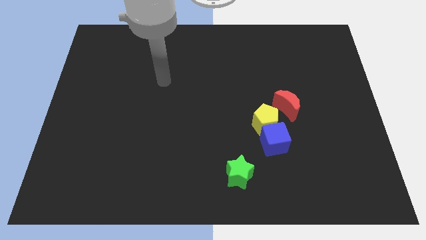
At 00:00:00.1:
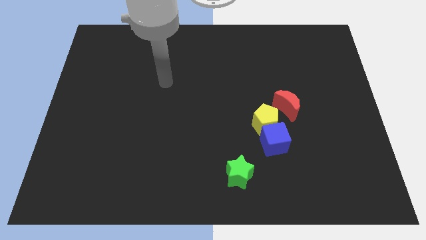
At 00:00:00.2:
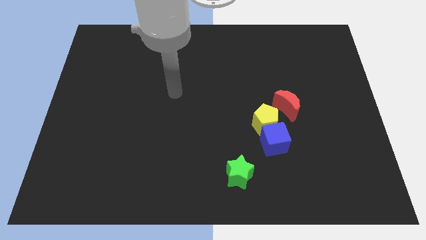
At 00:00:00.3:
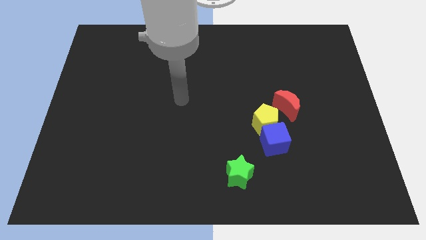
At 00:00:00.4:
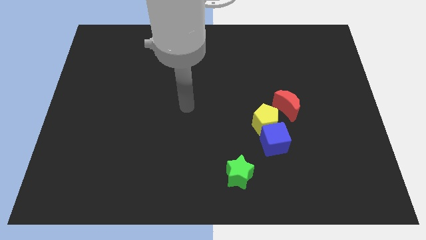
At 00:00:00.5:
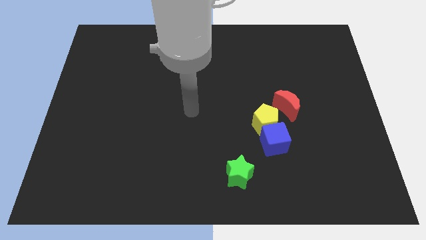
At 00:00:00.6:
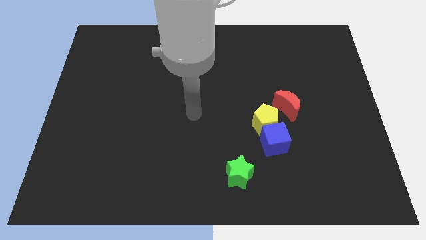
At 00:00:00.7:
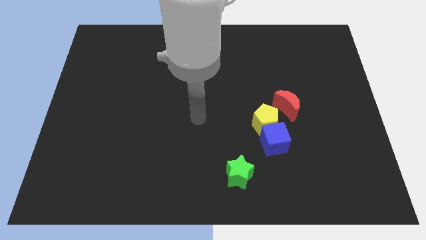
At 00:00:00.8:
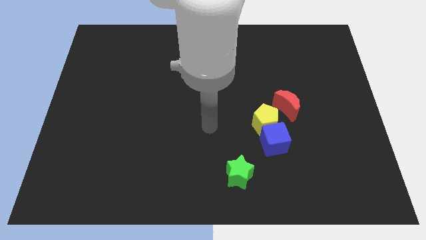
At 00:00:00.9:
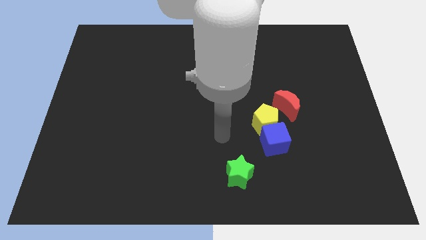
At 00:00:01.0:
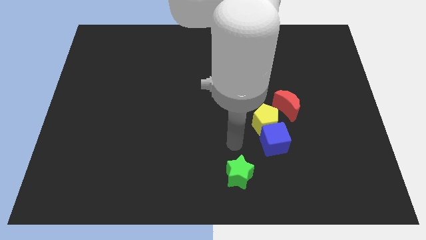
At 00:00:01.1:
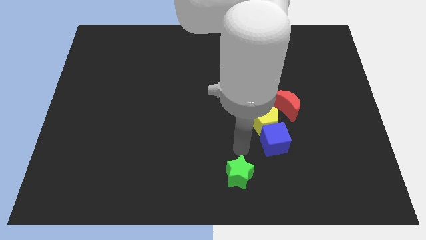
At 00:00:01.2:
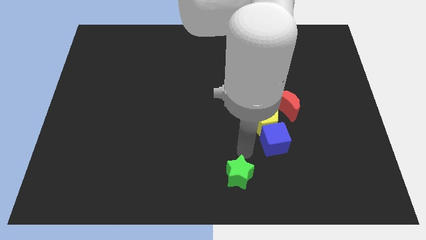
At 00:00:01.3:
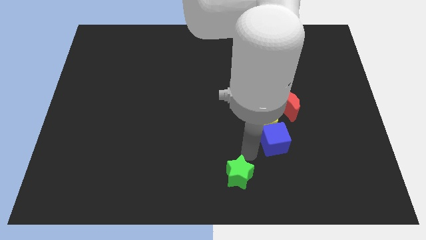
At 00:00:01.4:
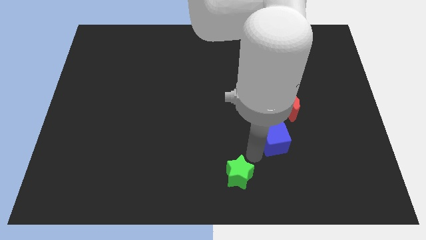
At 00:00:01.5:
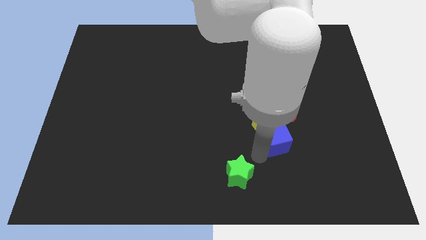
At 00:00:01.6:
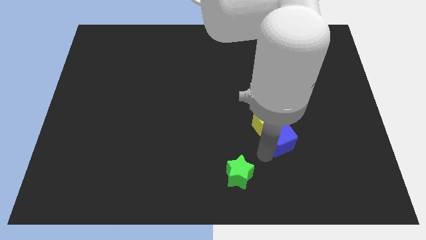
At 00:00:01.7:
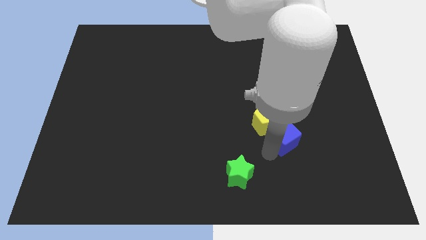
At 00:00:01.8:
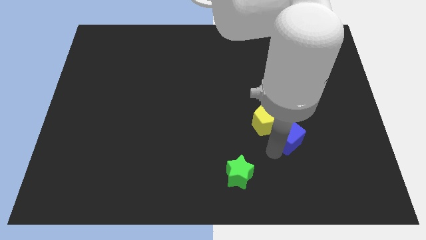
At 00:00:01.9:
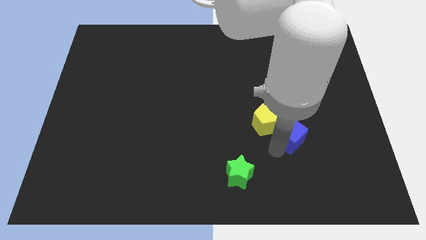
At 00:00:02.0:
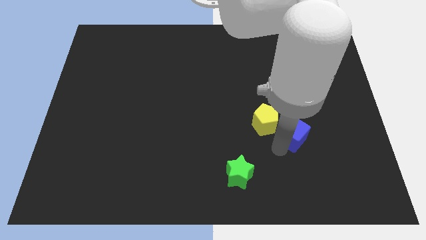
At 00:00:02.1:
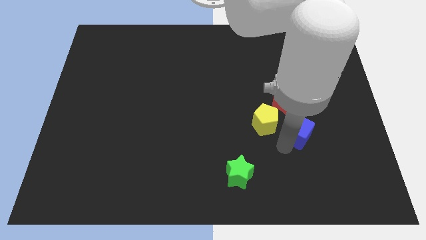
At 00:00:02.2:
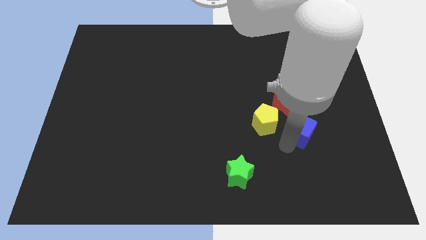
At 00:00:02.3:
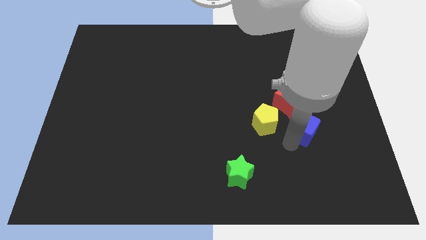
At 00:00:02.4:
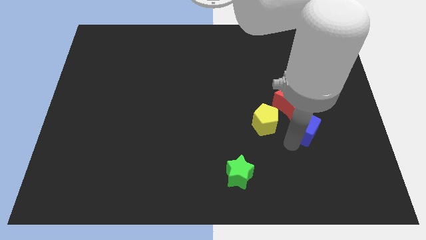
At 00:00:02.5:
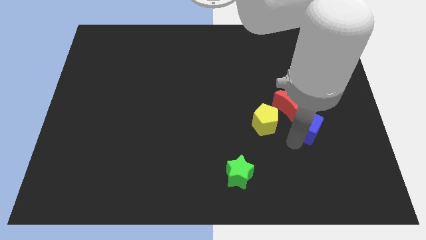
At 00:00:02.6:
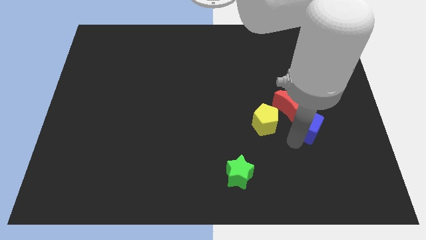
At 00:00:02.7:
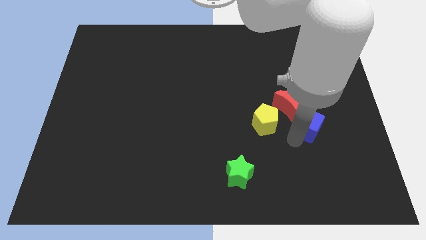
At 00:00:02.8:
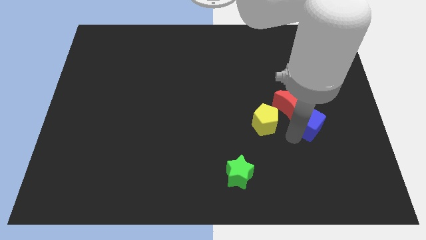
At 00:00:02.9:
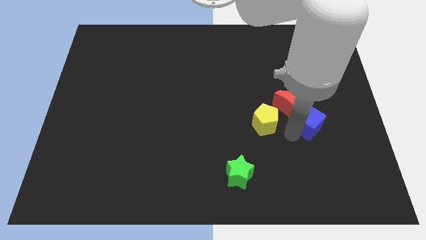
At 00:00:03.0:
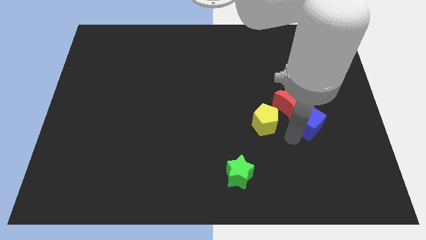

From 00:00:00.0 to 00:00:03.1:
put the blue block to the red moon

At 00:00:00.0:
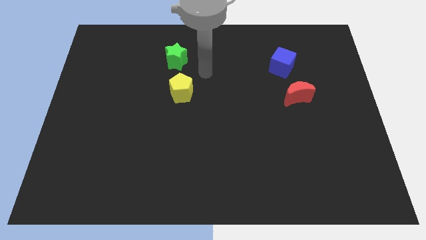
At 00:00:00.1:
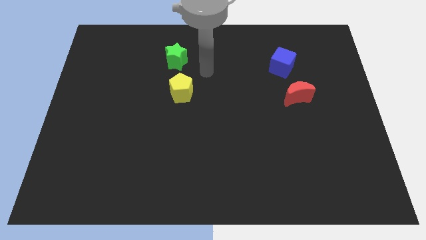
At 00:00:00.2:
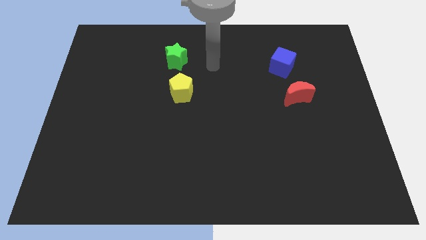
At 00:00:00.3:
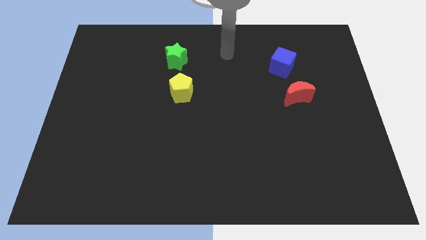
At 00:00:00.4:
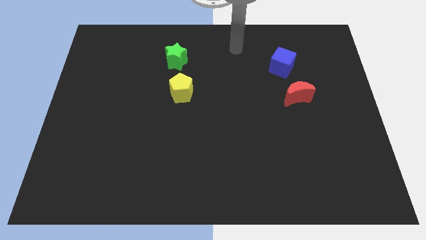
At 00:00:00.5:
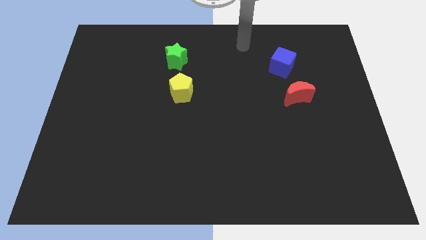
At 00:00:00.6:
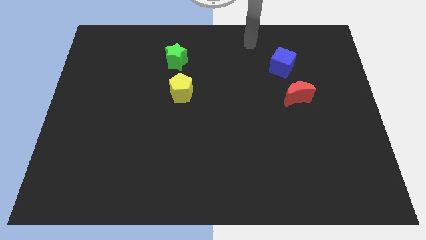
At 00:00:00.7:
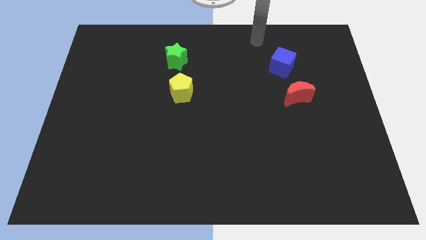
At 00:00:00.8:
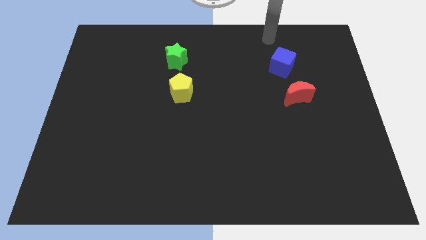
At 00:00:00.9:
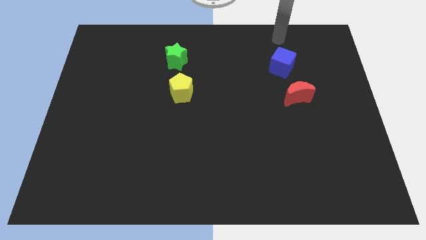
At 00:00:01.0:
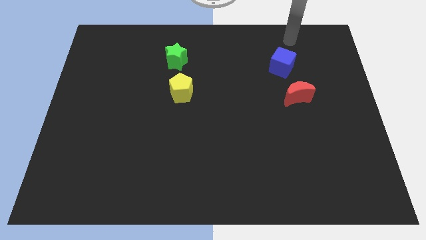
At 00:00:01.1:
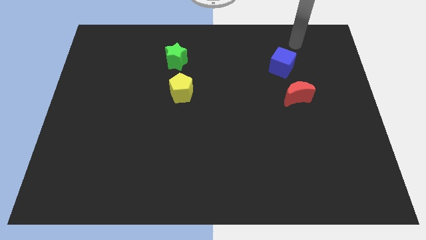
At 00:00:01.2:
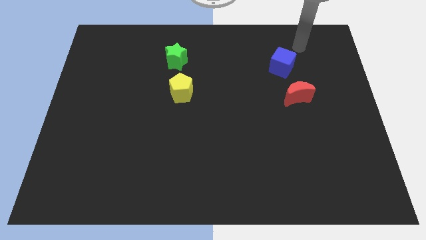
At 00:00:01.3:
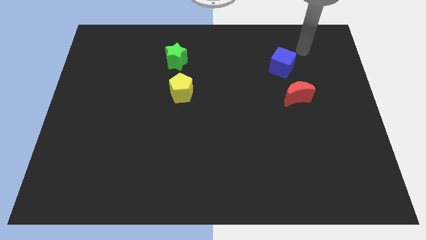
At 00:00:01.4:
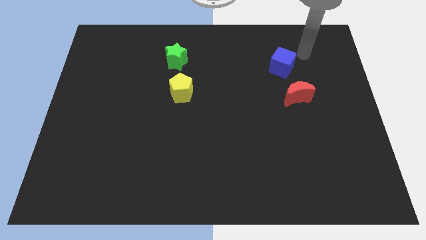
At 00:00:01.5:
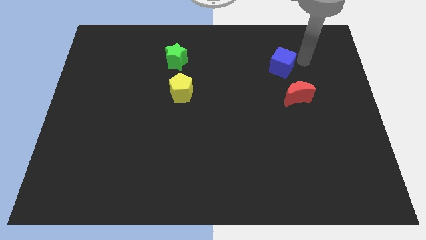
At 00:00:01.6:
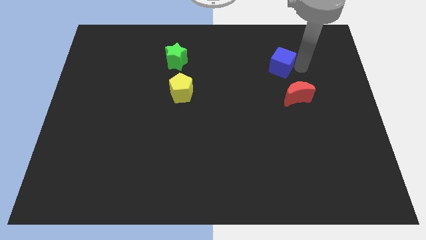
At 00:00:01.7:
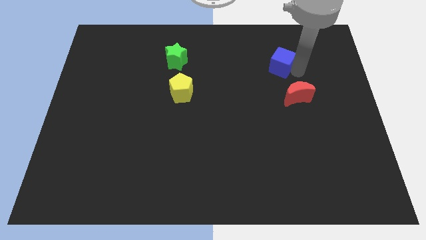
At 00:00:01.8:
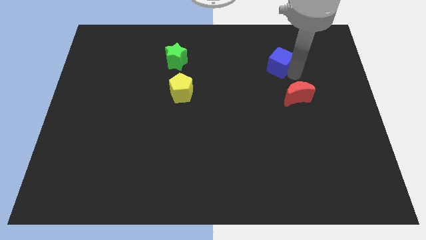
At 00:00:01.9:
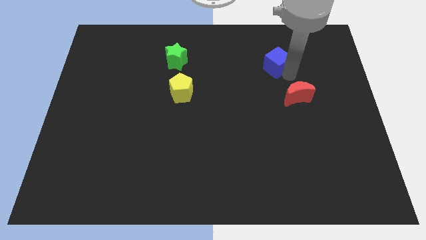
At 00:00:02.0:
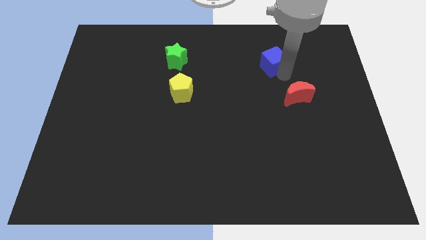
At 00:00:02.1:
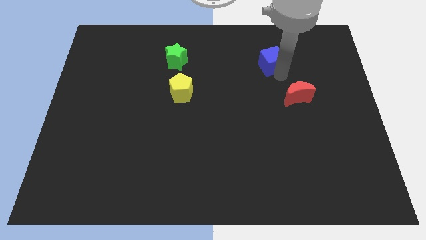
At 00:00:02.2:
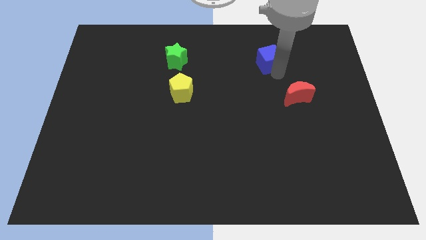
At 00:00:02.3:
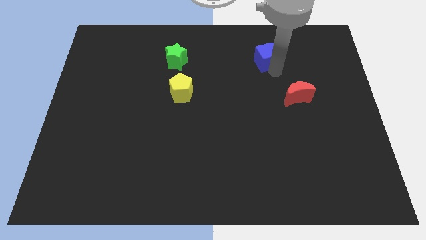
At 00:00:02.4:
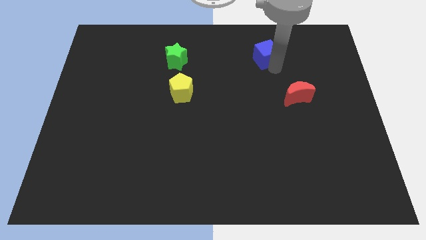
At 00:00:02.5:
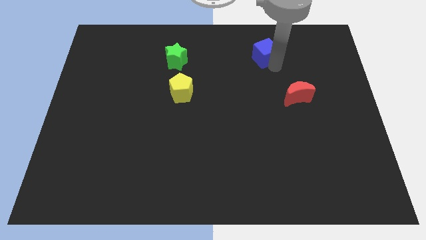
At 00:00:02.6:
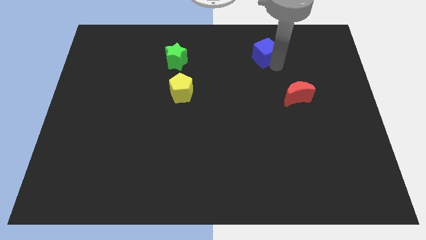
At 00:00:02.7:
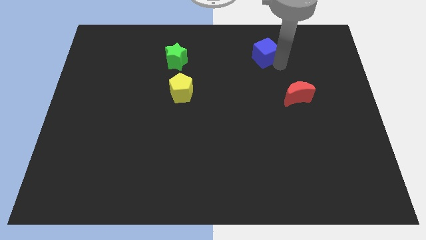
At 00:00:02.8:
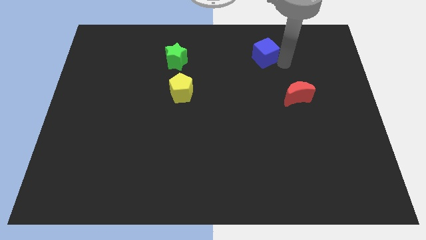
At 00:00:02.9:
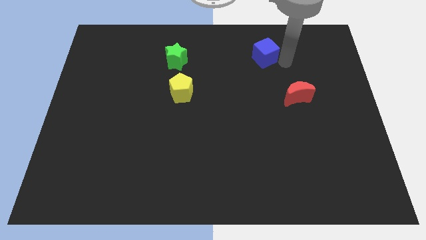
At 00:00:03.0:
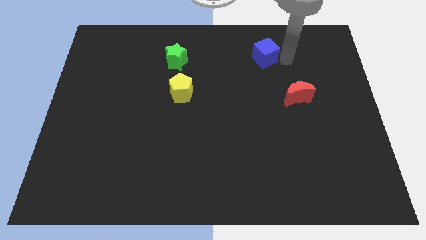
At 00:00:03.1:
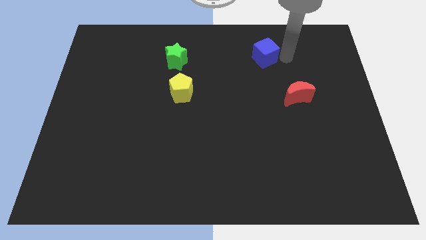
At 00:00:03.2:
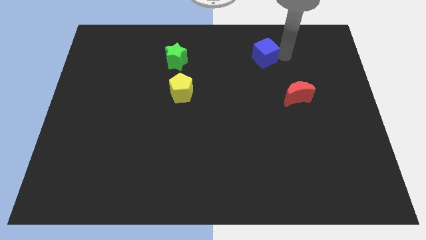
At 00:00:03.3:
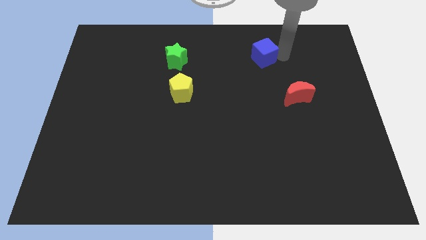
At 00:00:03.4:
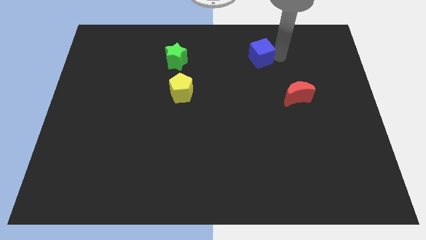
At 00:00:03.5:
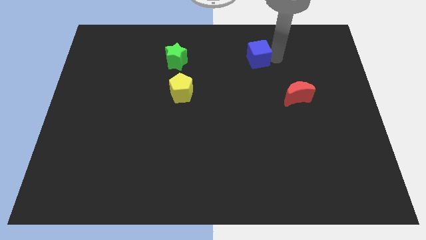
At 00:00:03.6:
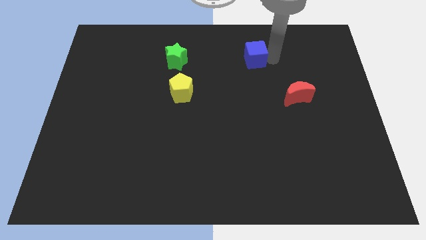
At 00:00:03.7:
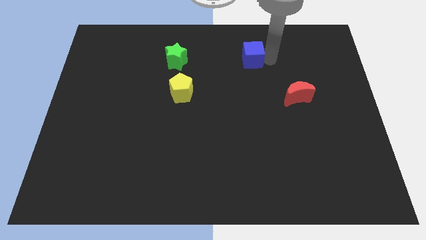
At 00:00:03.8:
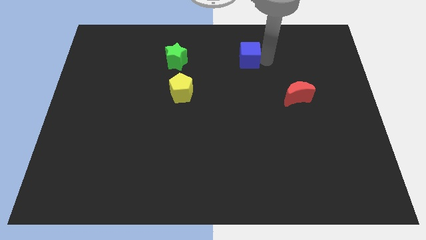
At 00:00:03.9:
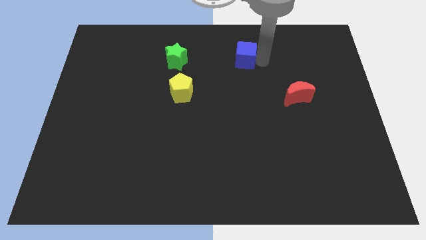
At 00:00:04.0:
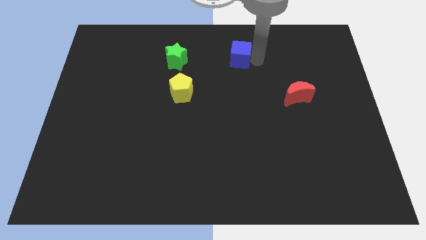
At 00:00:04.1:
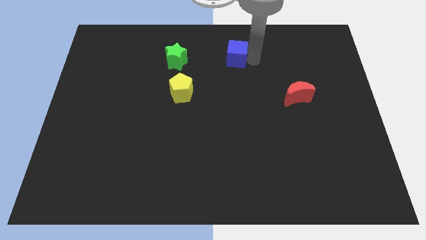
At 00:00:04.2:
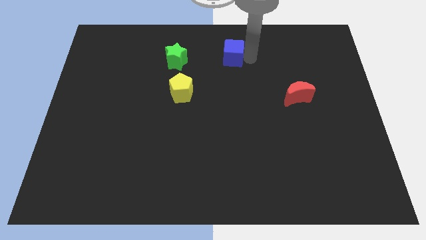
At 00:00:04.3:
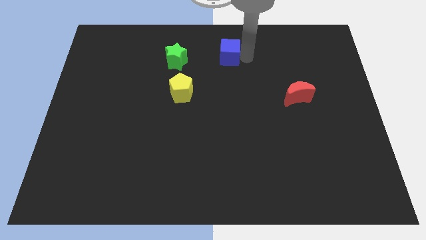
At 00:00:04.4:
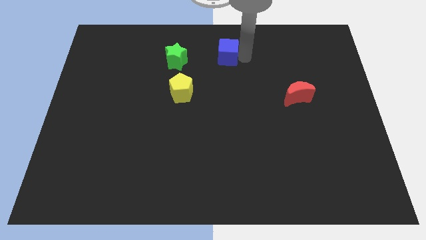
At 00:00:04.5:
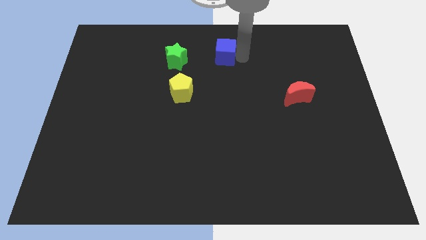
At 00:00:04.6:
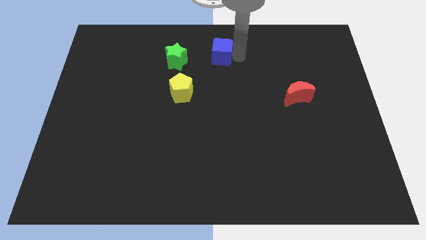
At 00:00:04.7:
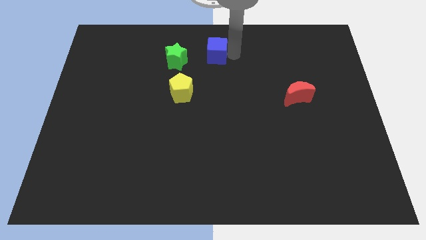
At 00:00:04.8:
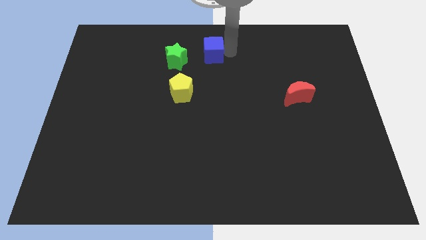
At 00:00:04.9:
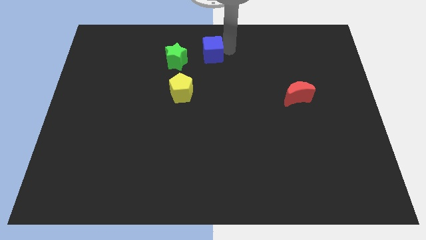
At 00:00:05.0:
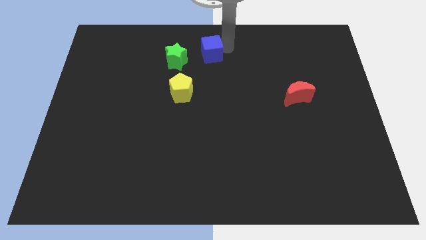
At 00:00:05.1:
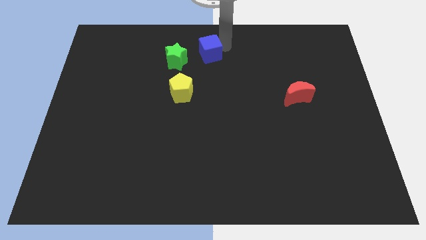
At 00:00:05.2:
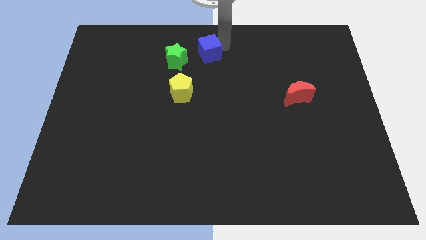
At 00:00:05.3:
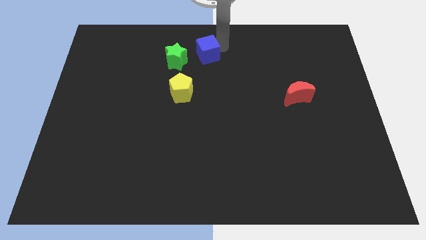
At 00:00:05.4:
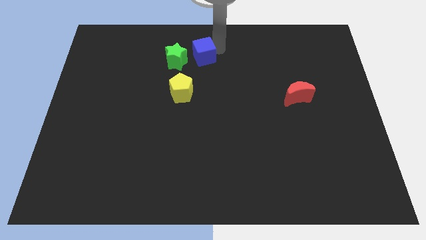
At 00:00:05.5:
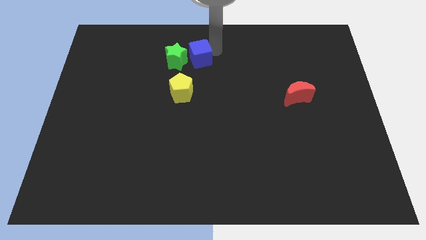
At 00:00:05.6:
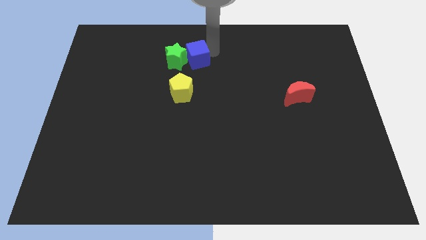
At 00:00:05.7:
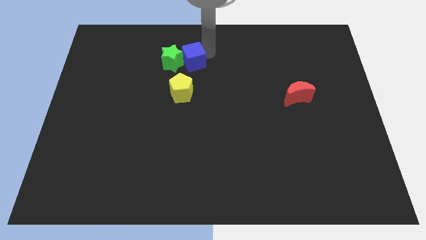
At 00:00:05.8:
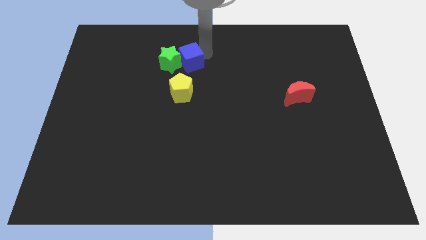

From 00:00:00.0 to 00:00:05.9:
move the blue cube close to the green star
